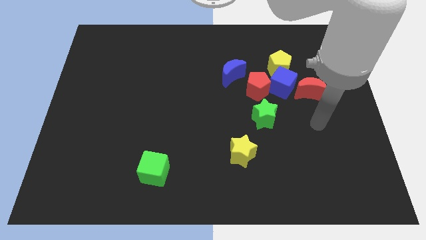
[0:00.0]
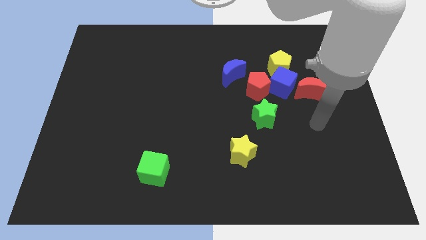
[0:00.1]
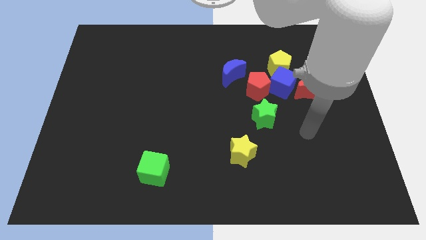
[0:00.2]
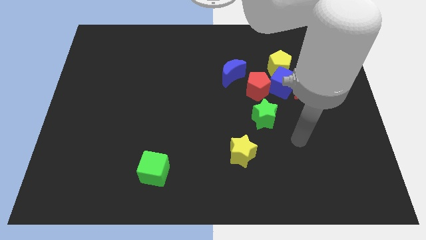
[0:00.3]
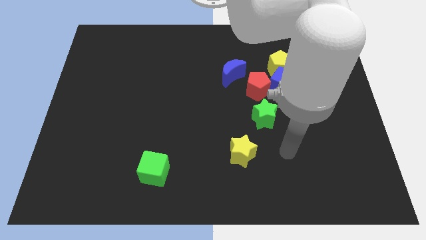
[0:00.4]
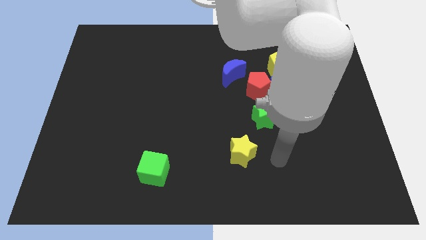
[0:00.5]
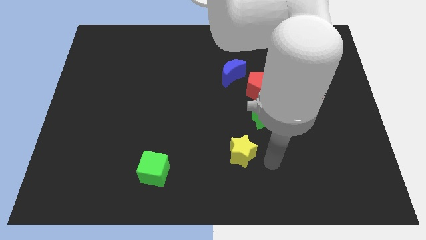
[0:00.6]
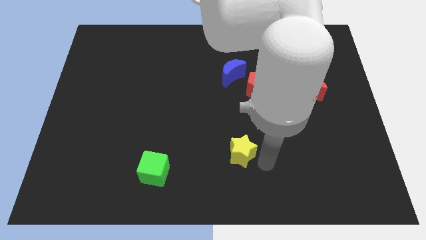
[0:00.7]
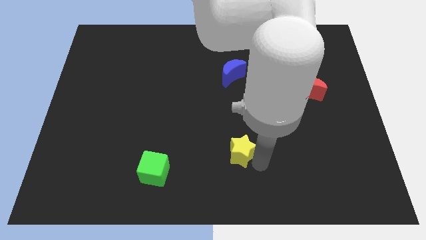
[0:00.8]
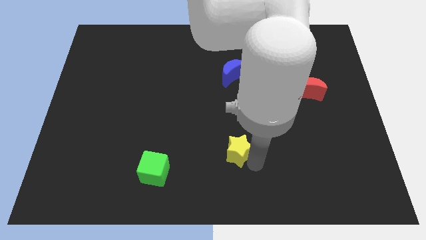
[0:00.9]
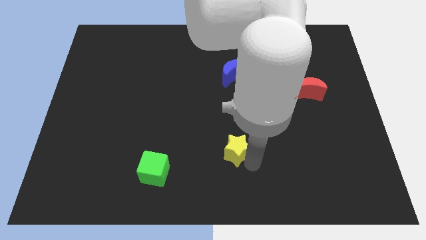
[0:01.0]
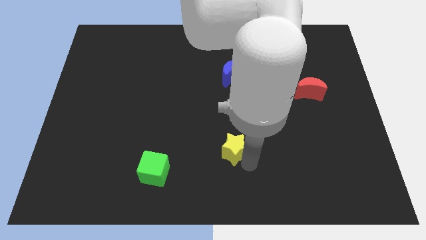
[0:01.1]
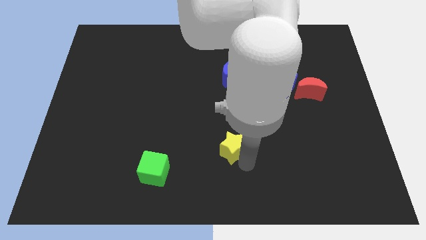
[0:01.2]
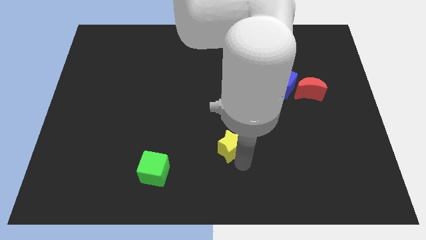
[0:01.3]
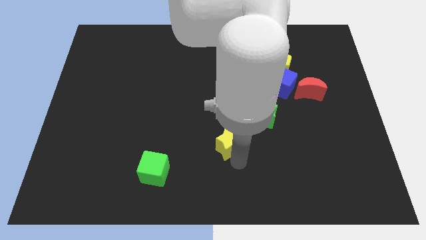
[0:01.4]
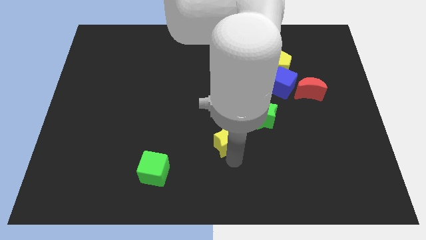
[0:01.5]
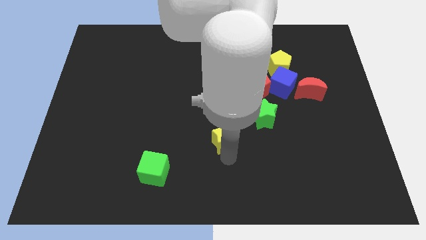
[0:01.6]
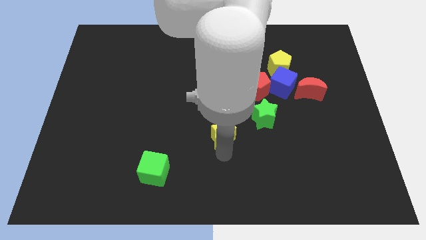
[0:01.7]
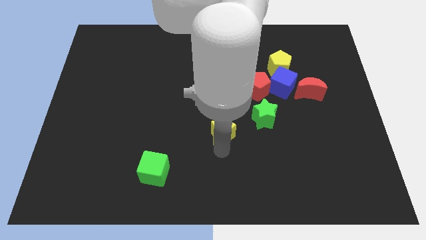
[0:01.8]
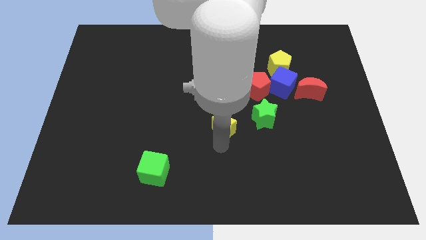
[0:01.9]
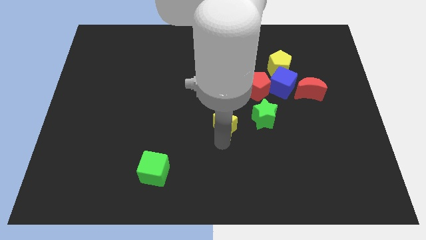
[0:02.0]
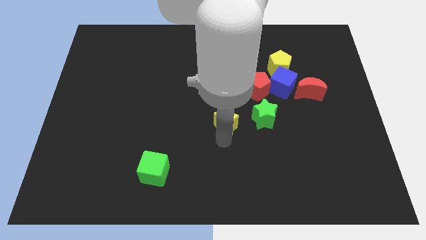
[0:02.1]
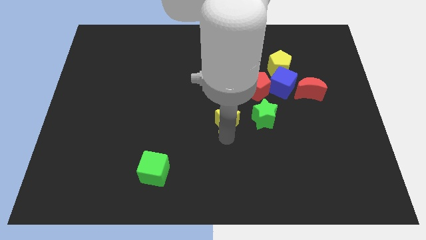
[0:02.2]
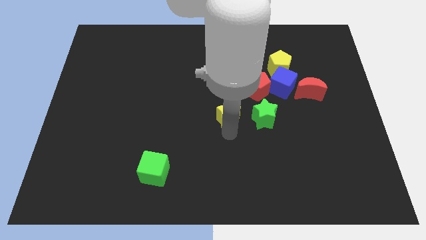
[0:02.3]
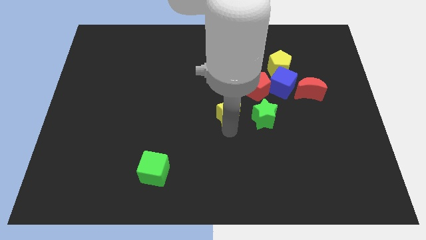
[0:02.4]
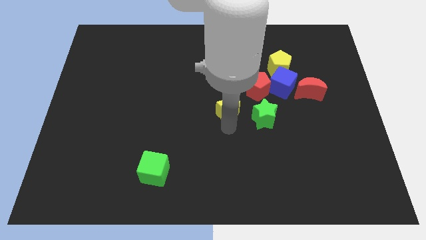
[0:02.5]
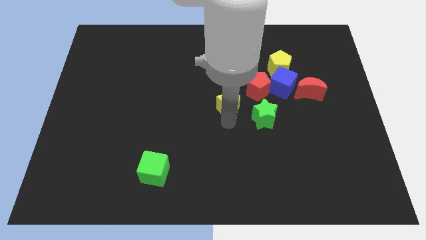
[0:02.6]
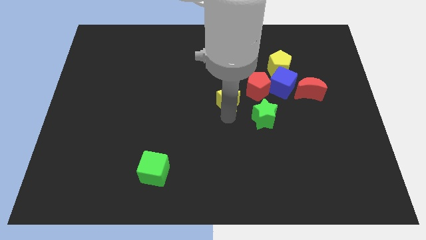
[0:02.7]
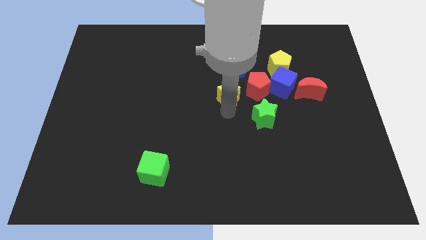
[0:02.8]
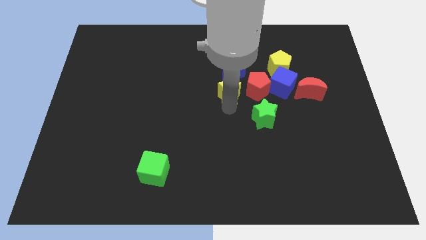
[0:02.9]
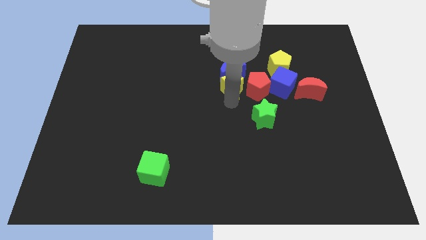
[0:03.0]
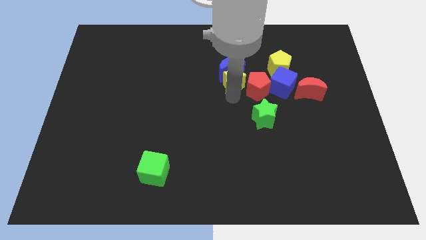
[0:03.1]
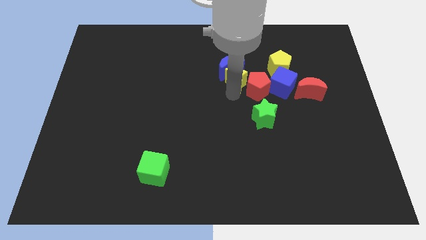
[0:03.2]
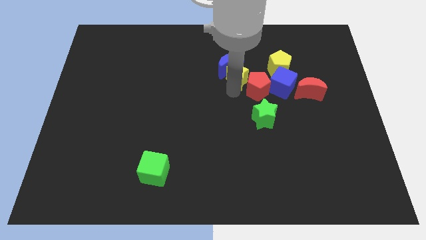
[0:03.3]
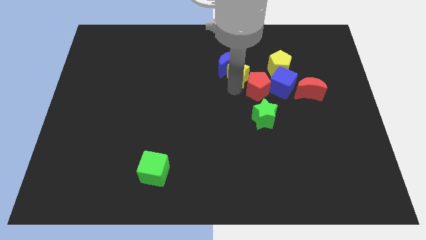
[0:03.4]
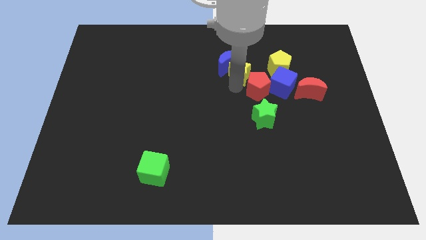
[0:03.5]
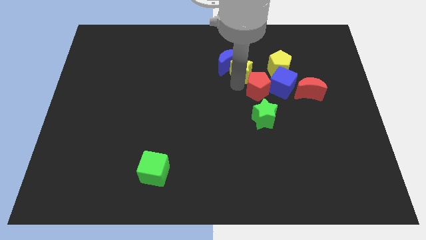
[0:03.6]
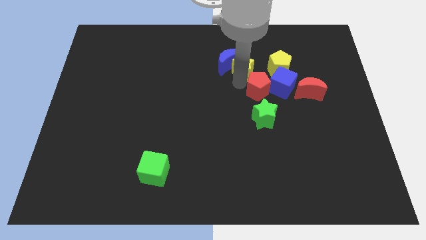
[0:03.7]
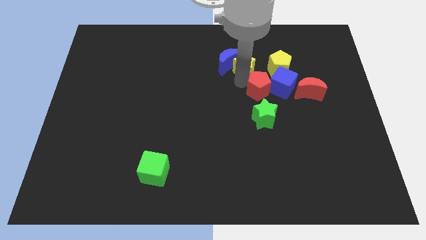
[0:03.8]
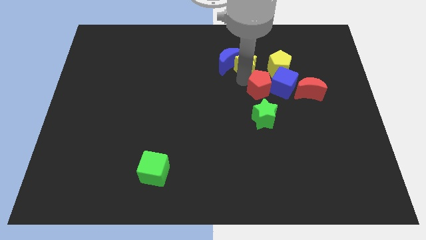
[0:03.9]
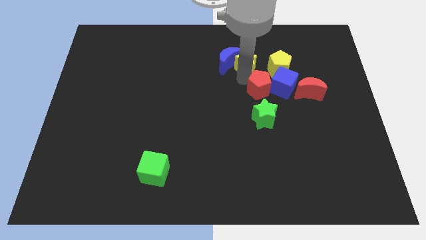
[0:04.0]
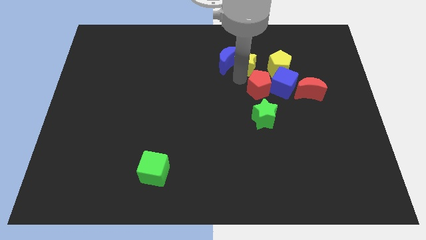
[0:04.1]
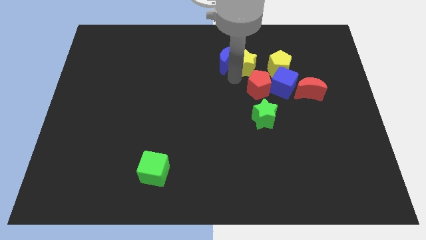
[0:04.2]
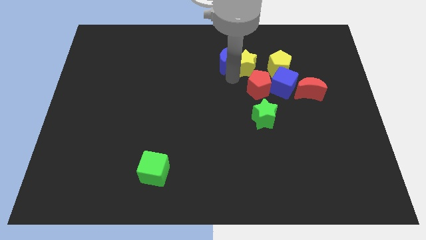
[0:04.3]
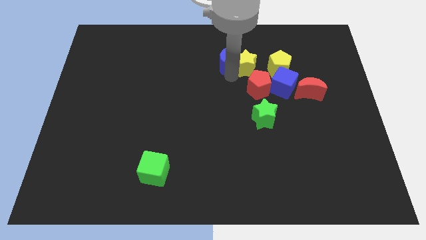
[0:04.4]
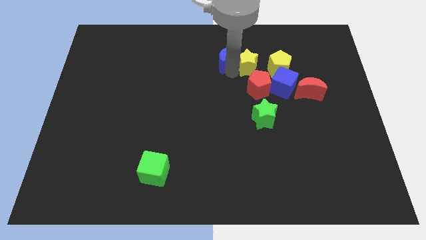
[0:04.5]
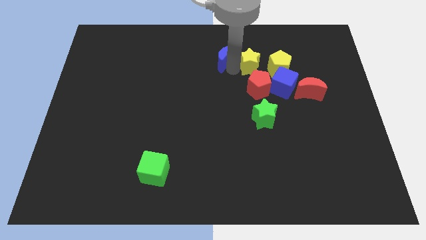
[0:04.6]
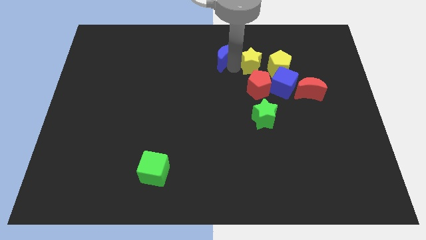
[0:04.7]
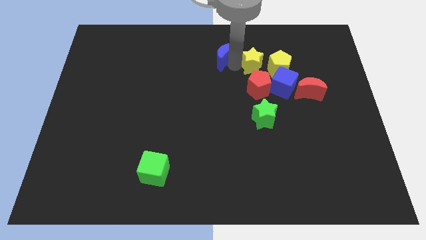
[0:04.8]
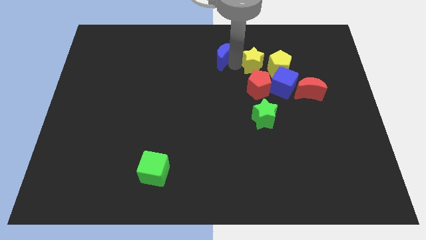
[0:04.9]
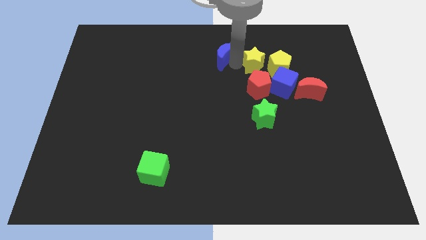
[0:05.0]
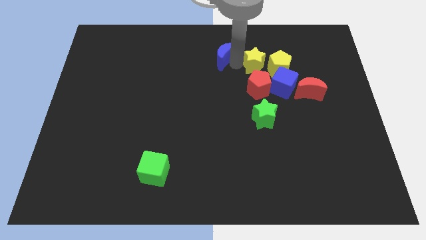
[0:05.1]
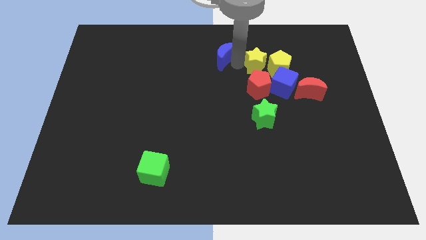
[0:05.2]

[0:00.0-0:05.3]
push the yellow star next to the yellow pentagon

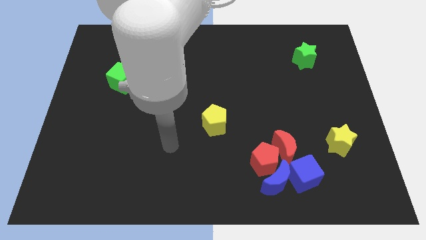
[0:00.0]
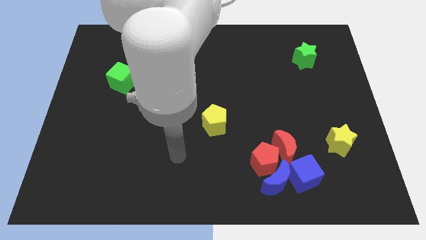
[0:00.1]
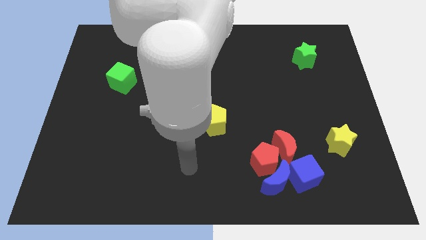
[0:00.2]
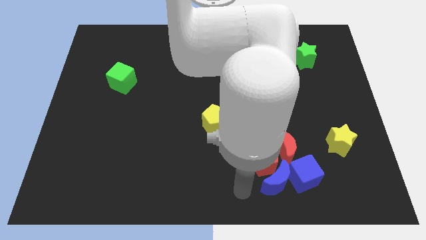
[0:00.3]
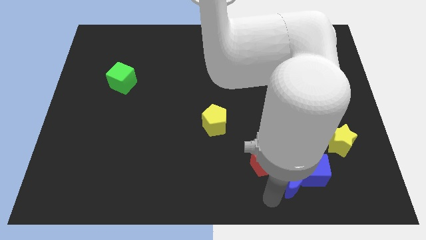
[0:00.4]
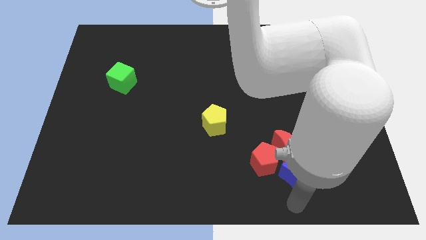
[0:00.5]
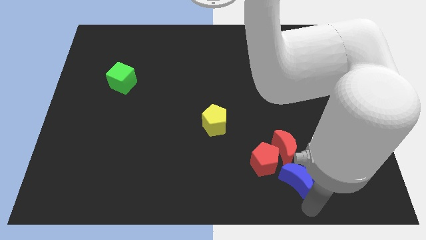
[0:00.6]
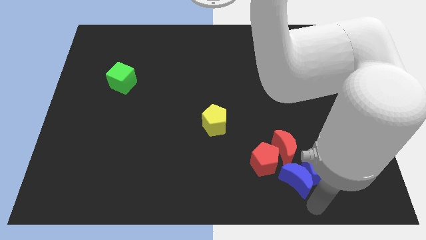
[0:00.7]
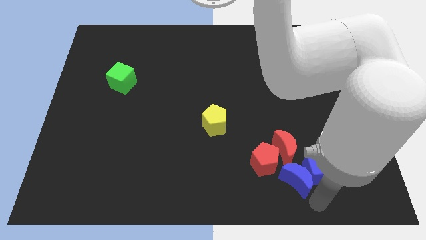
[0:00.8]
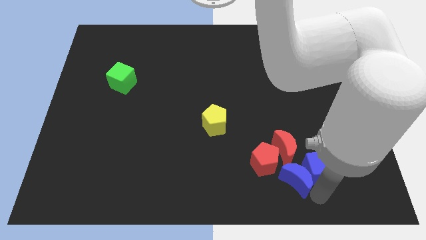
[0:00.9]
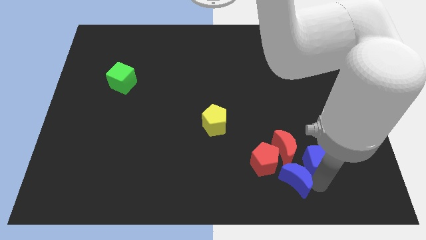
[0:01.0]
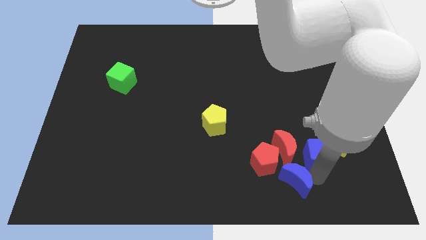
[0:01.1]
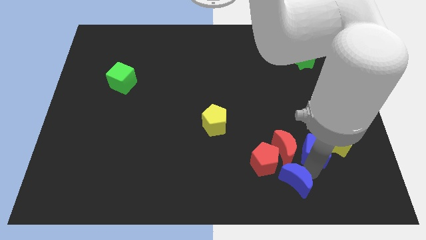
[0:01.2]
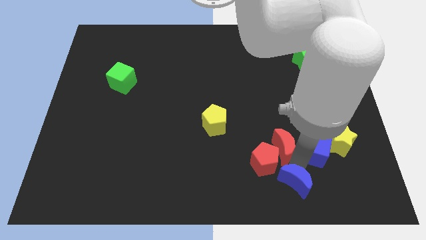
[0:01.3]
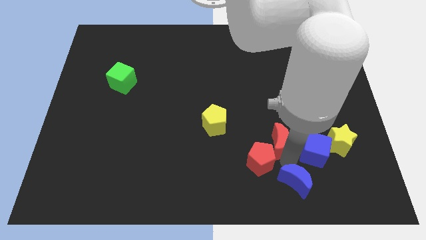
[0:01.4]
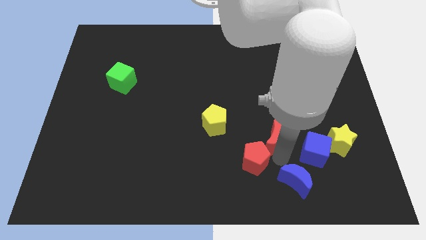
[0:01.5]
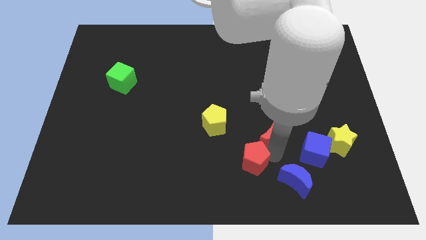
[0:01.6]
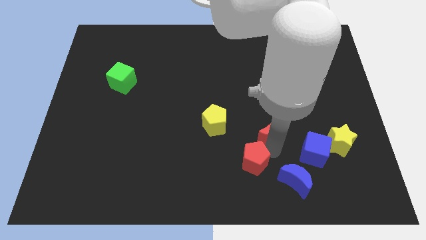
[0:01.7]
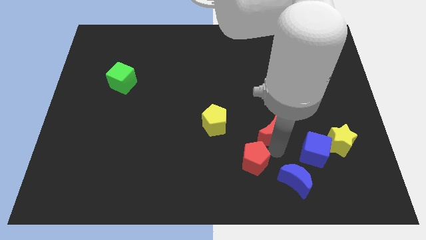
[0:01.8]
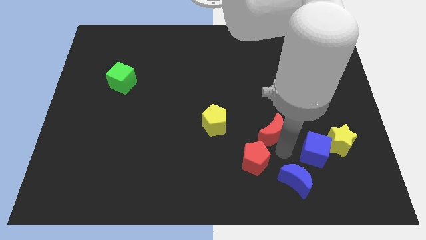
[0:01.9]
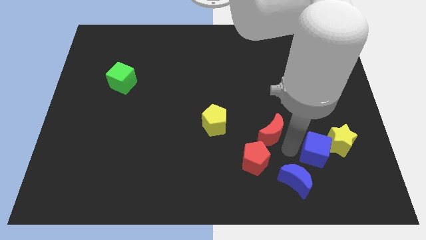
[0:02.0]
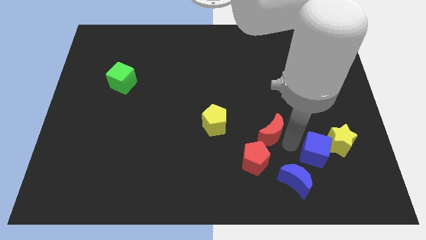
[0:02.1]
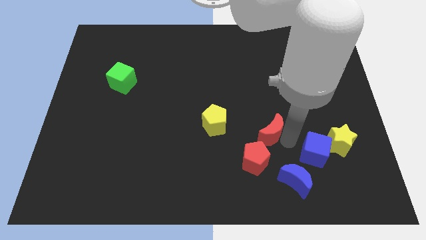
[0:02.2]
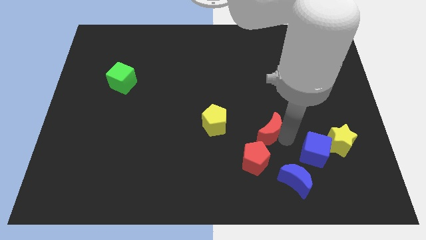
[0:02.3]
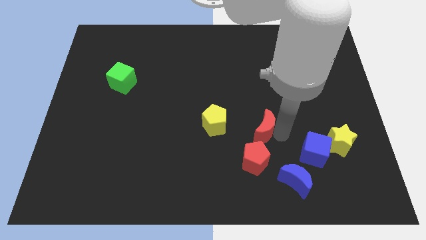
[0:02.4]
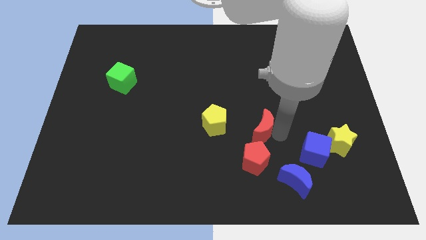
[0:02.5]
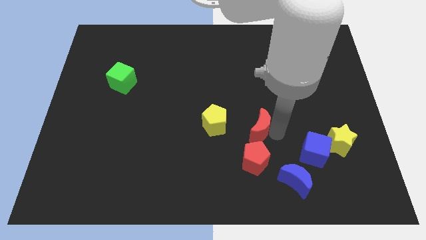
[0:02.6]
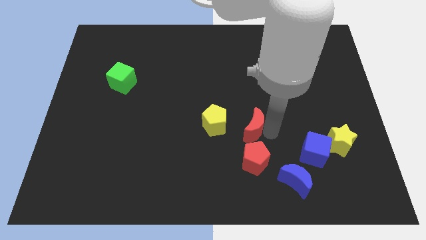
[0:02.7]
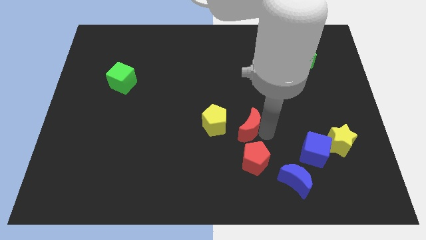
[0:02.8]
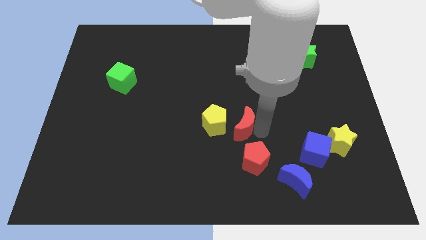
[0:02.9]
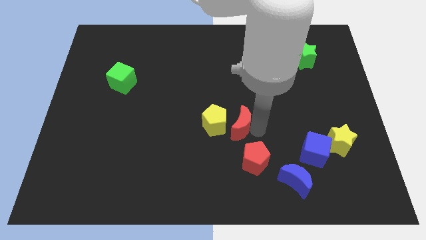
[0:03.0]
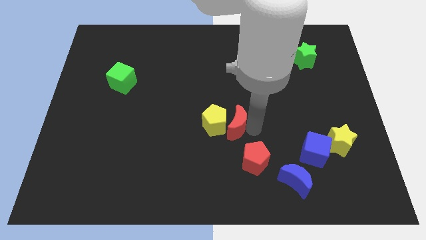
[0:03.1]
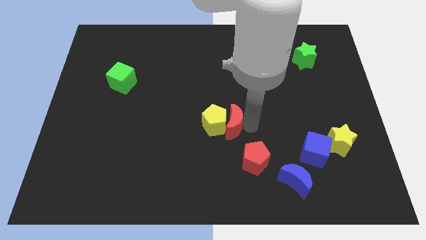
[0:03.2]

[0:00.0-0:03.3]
slide the red moon next to the yellow pentagon
